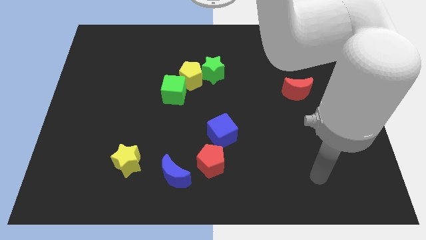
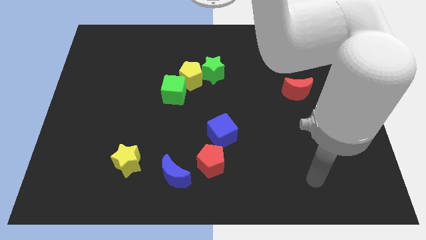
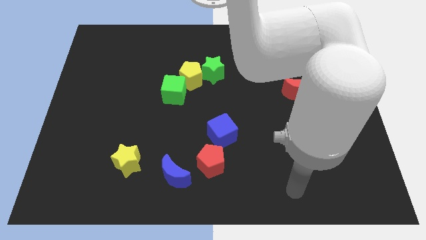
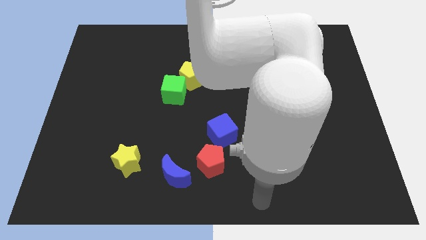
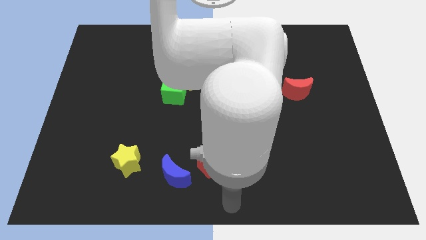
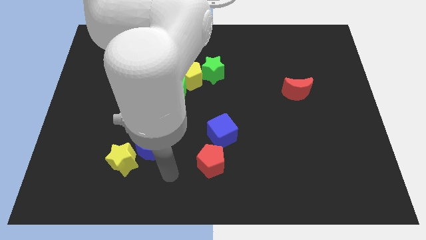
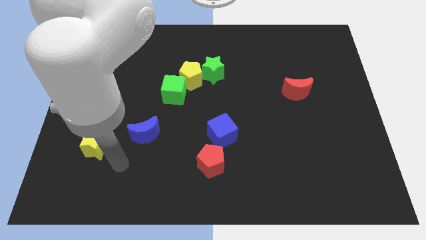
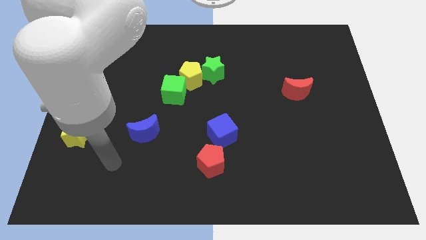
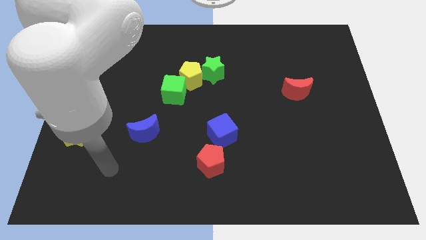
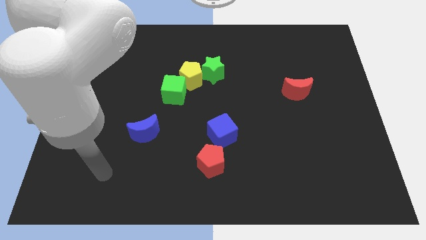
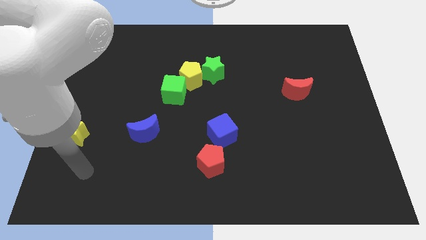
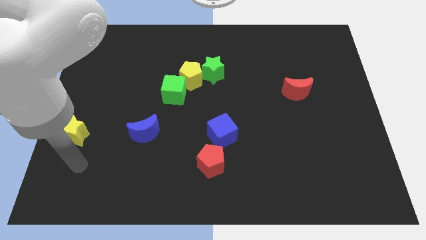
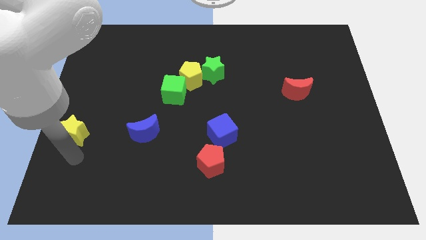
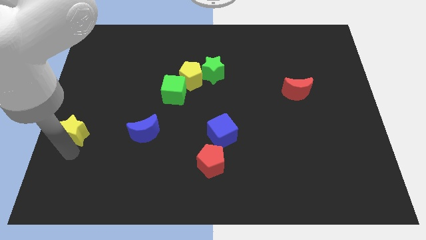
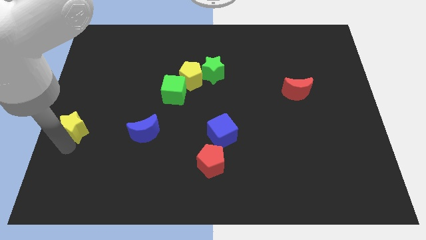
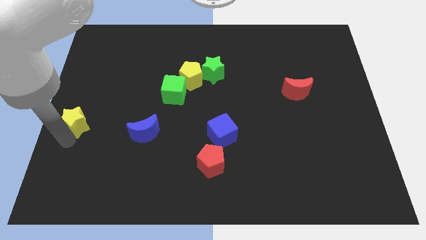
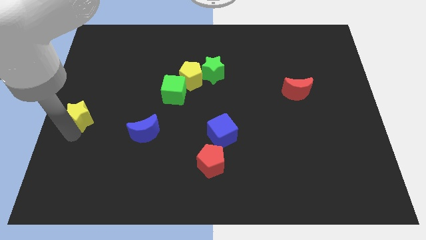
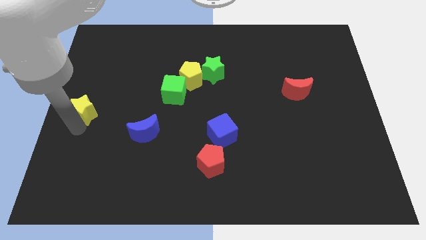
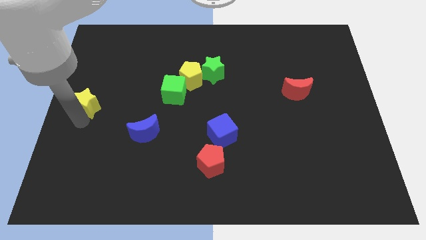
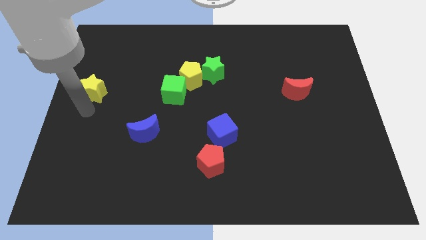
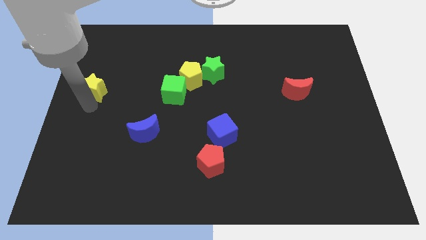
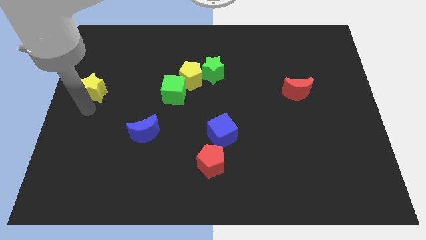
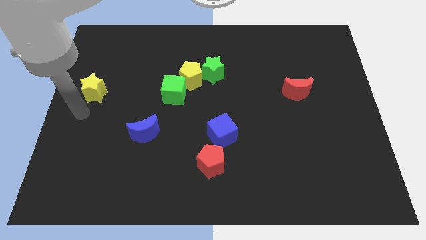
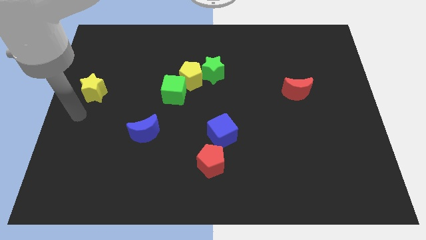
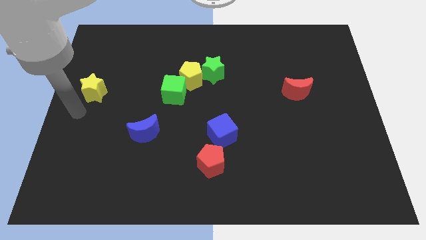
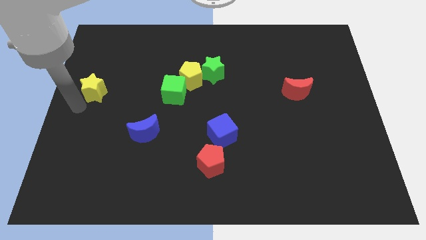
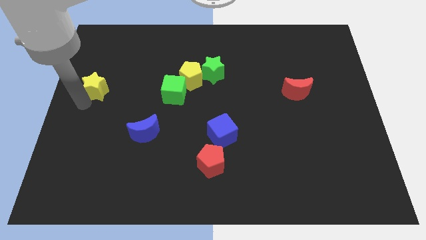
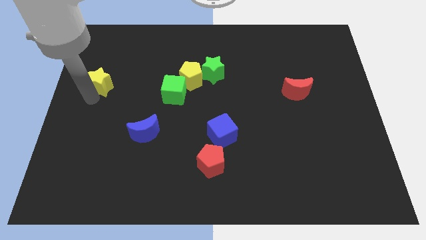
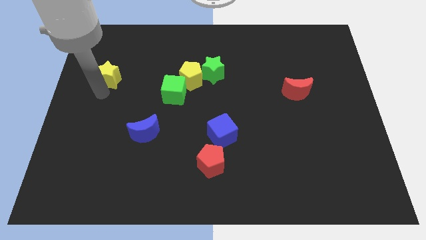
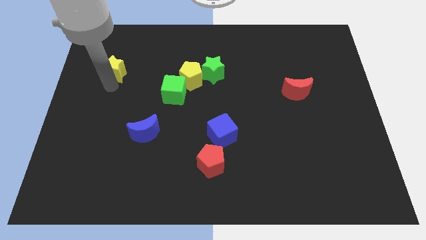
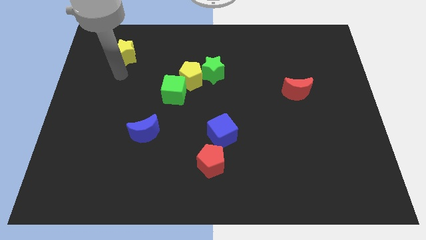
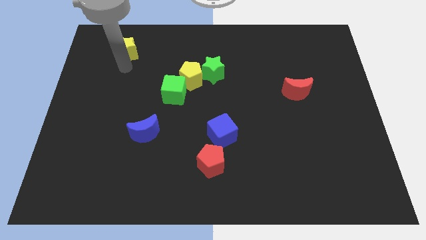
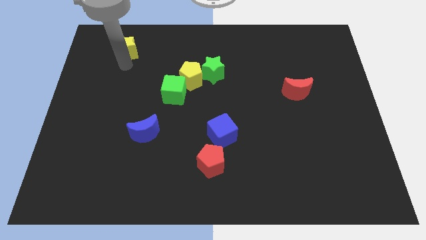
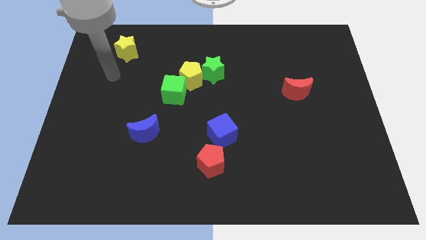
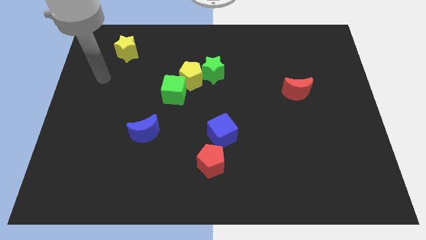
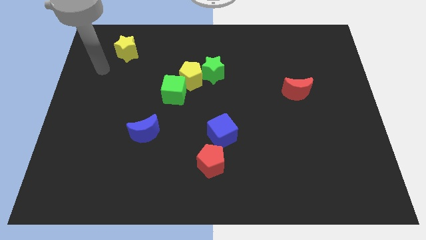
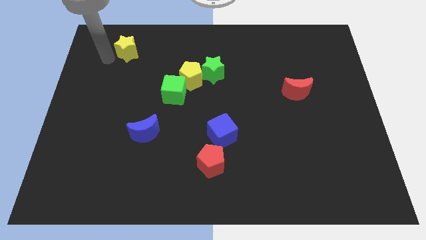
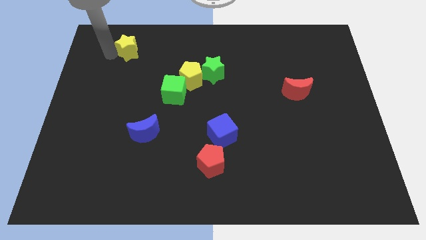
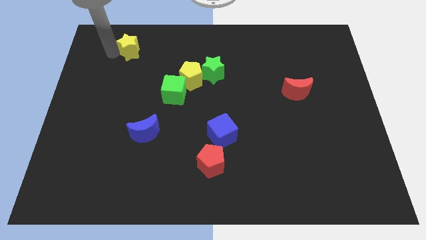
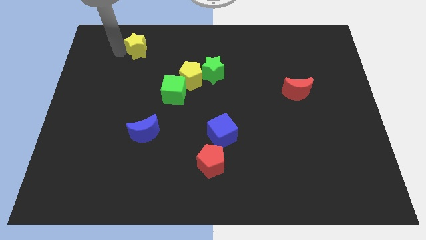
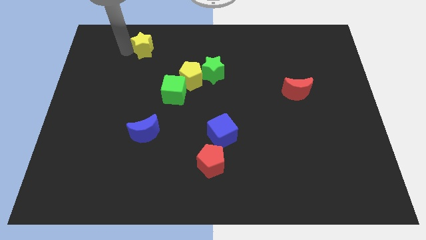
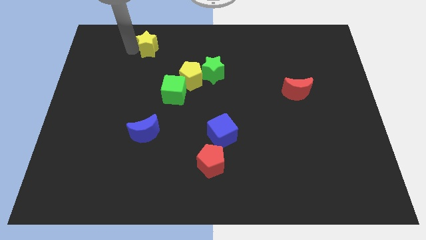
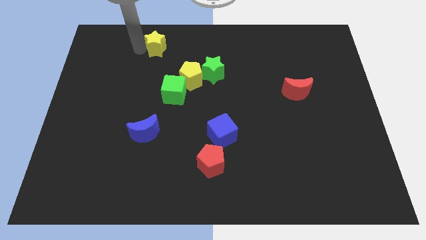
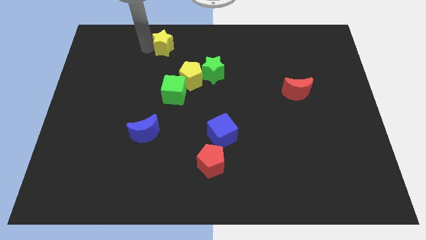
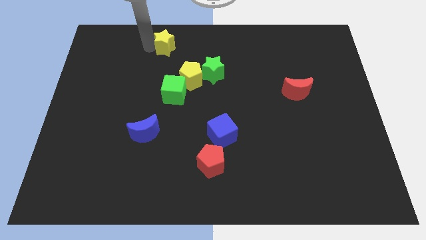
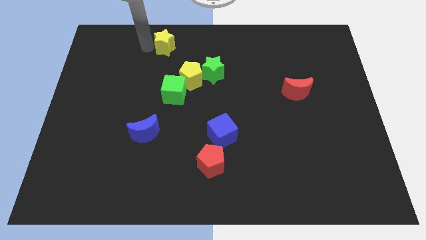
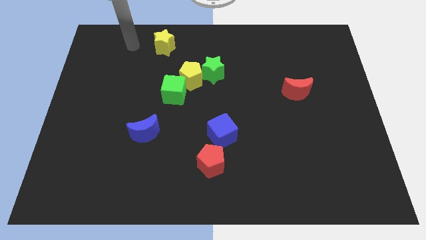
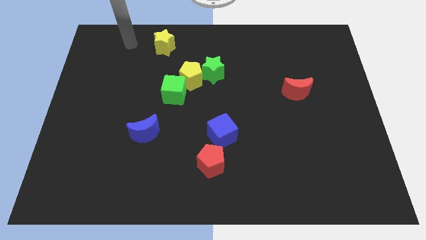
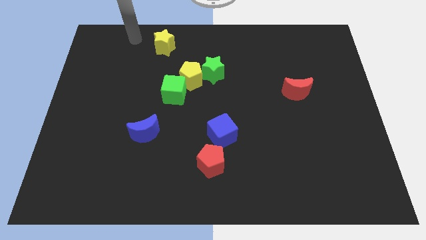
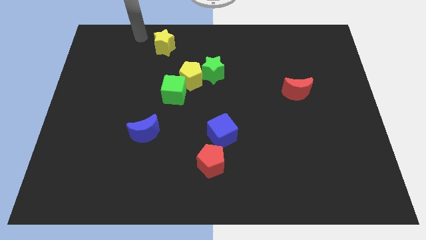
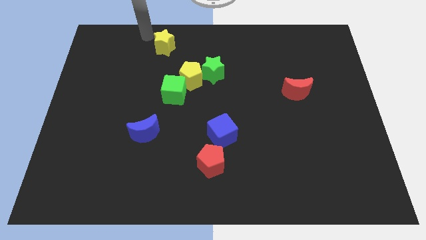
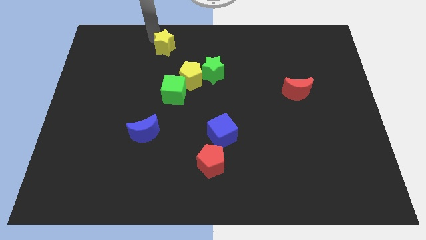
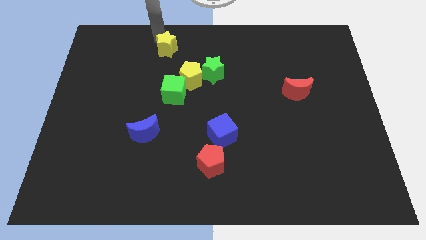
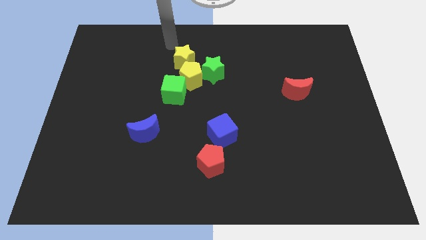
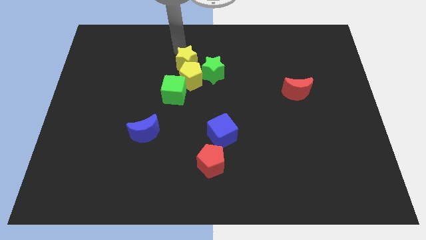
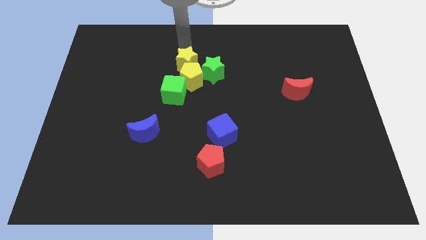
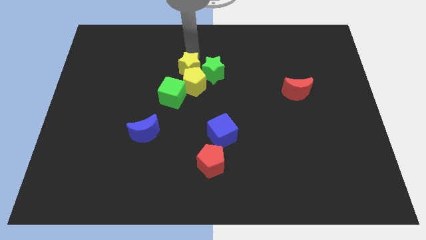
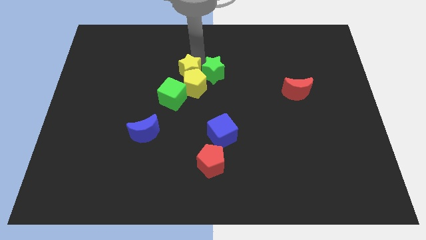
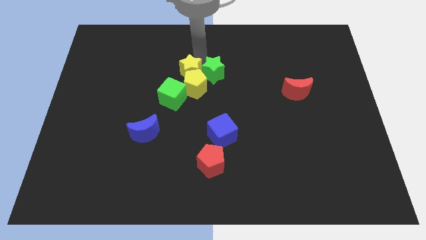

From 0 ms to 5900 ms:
slide the yellow star towards the green star

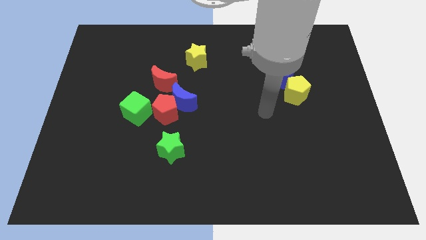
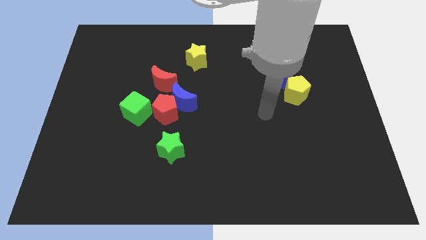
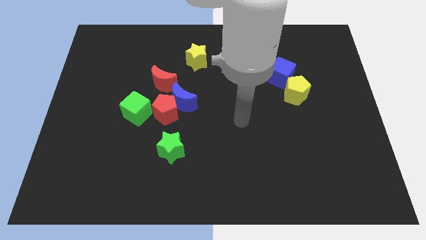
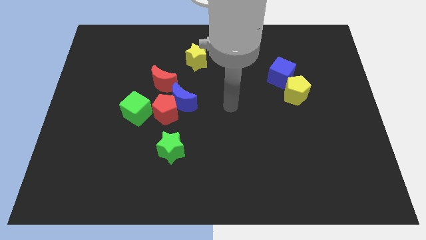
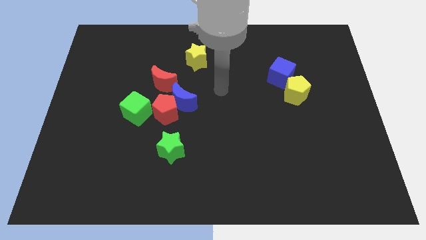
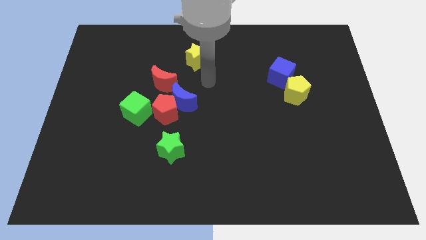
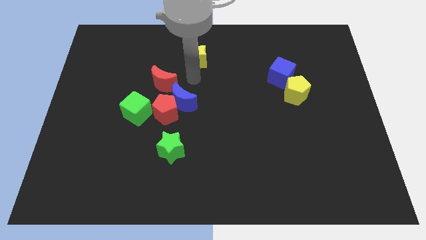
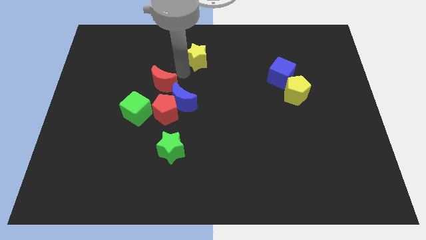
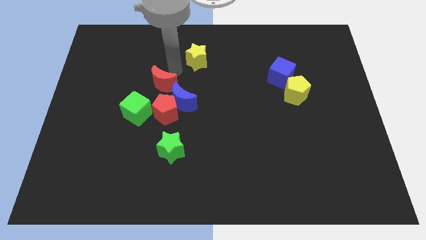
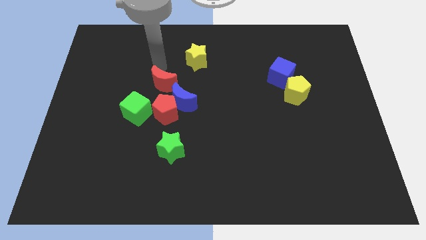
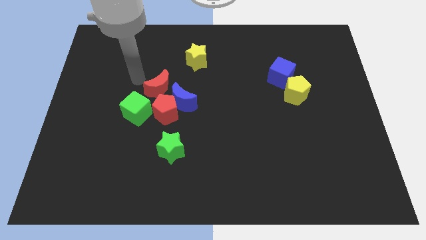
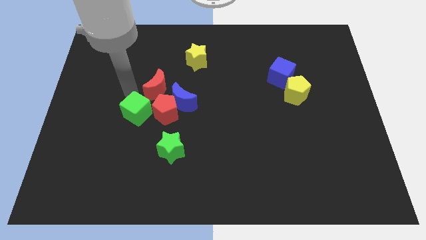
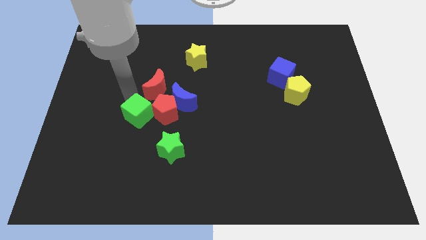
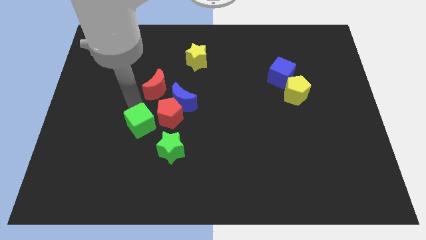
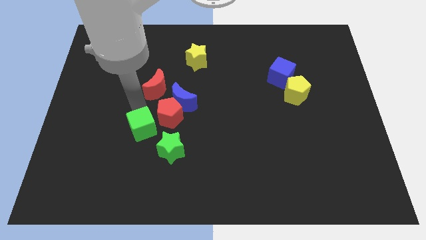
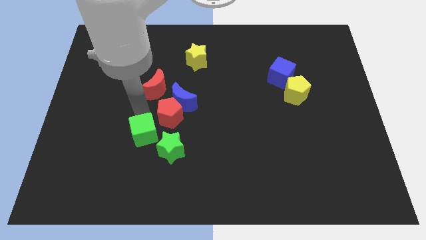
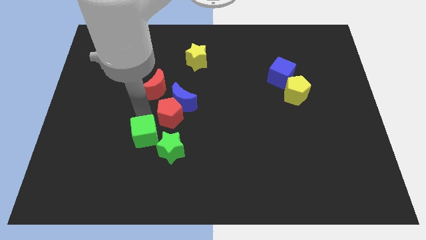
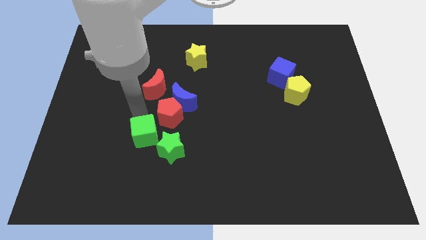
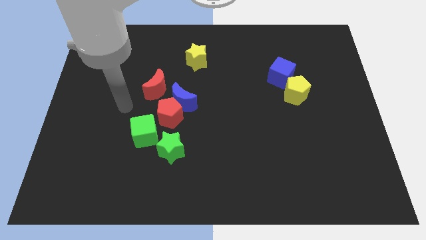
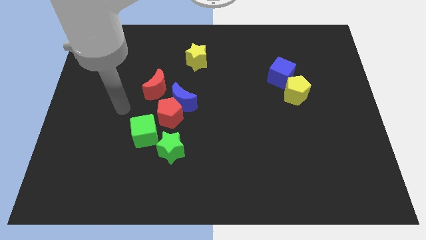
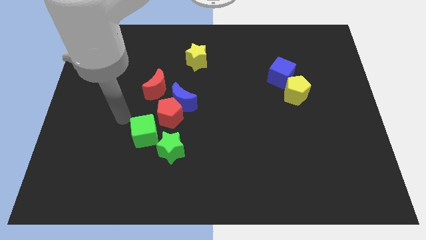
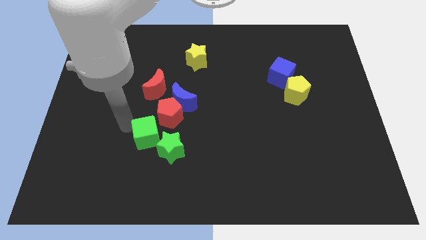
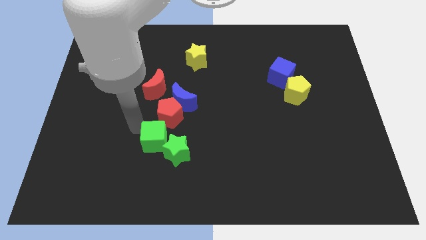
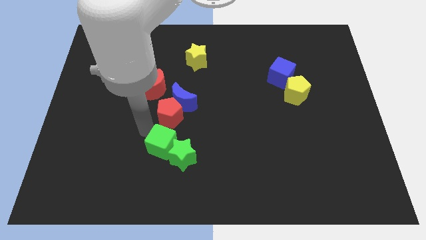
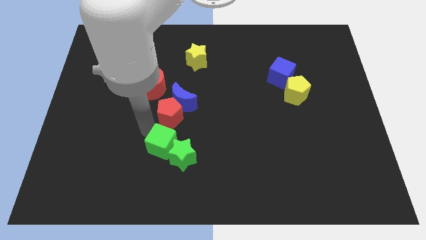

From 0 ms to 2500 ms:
put the green cube close to the green star
